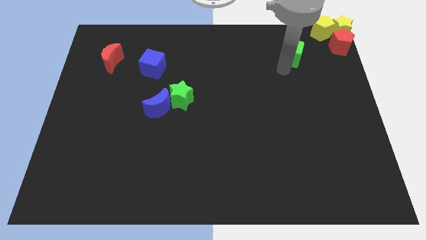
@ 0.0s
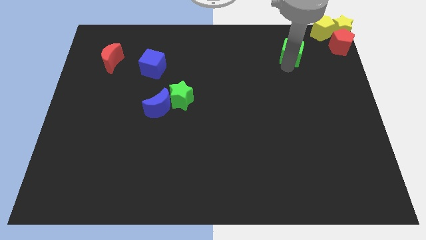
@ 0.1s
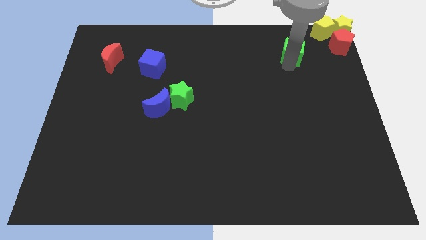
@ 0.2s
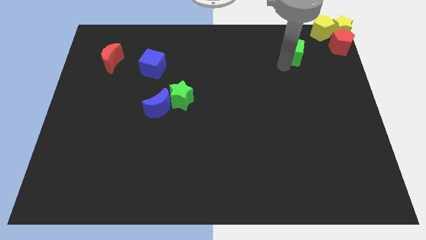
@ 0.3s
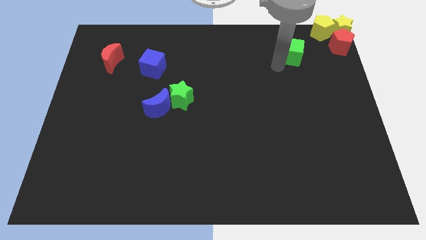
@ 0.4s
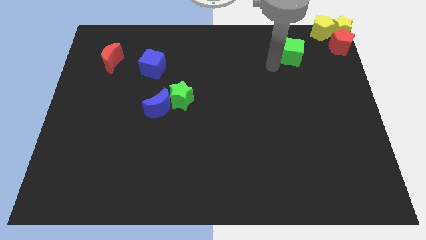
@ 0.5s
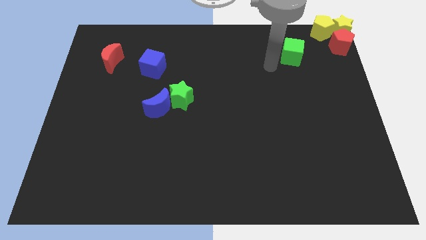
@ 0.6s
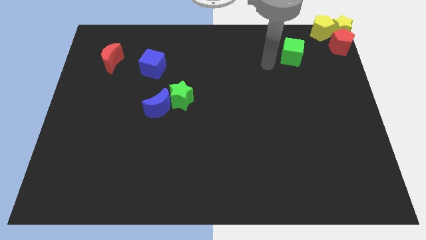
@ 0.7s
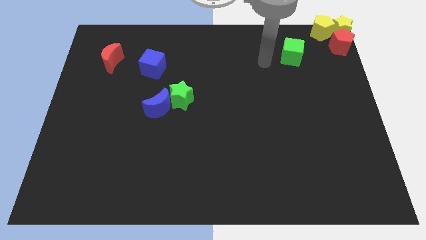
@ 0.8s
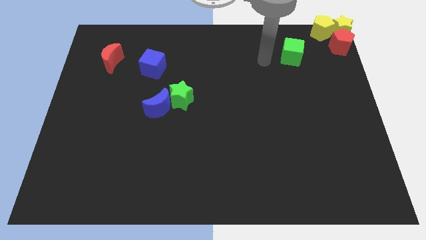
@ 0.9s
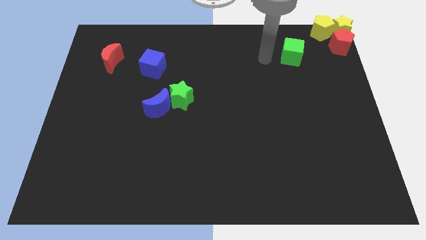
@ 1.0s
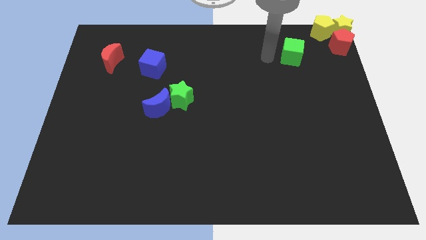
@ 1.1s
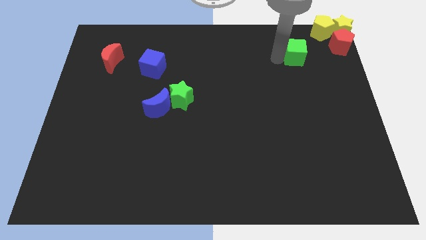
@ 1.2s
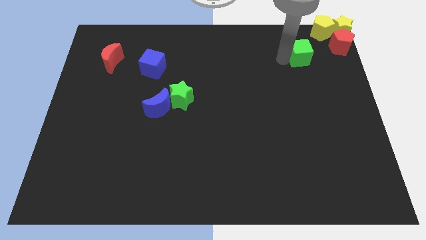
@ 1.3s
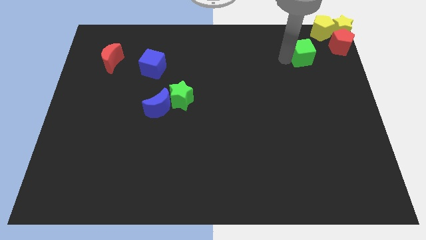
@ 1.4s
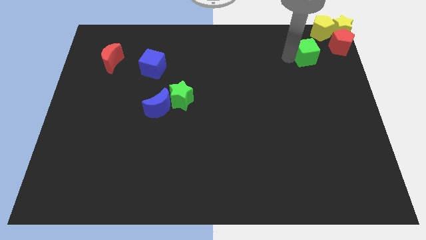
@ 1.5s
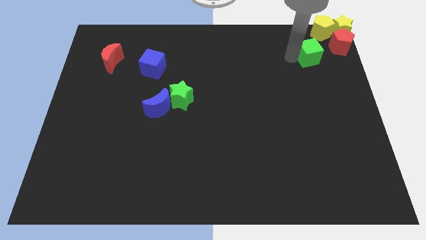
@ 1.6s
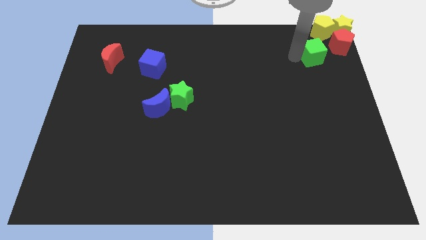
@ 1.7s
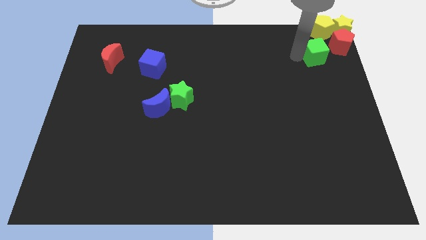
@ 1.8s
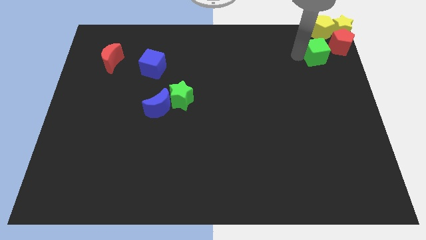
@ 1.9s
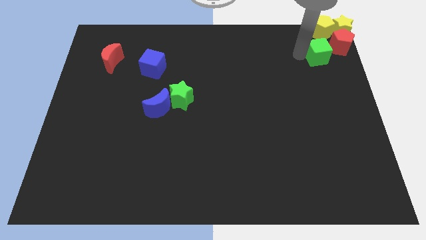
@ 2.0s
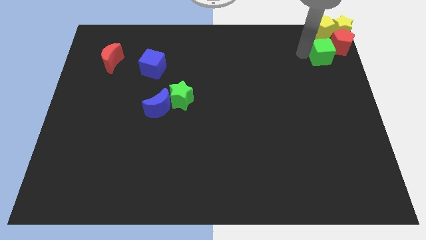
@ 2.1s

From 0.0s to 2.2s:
push the green cube to the bottom of the yellow pentagon

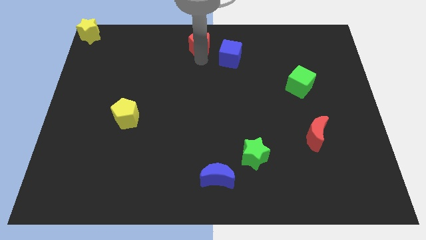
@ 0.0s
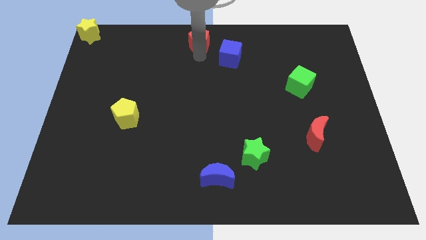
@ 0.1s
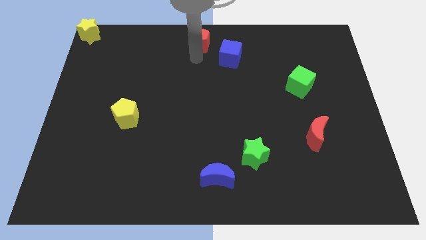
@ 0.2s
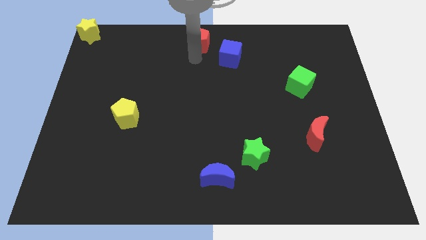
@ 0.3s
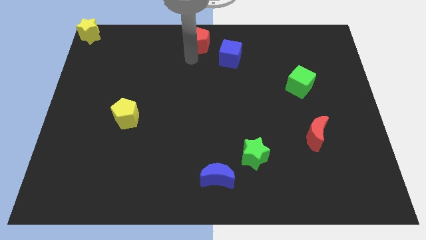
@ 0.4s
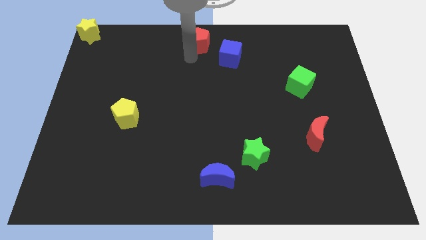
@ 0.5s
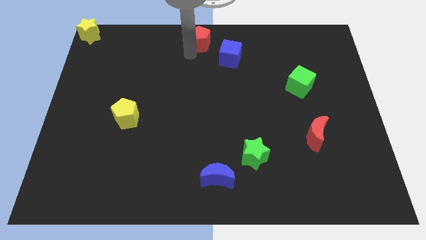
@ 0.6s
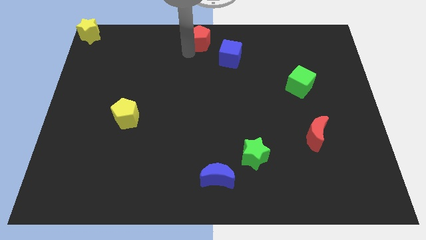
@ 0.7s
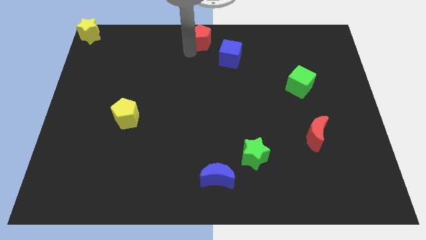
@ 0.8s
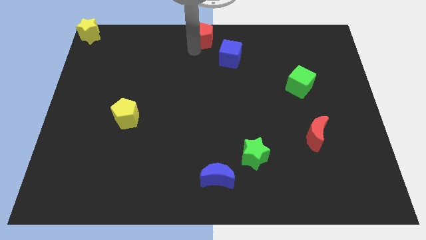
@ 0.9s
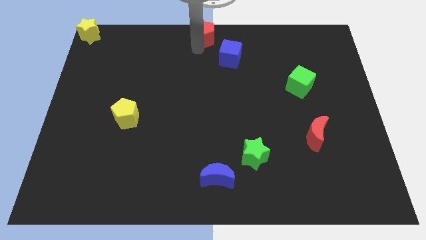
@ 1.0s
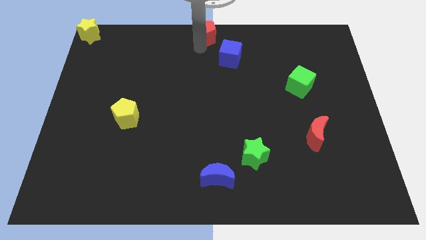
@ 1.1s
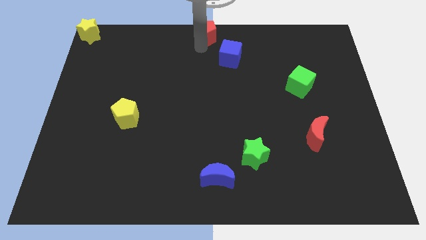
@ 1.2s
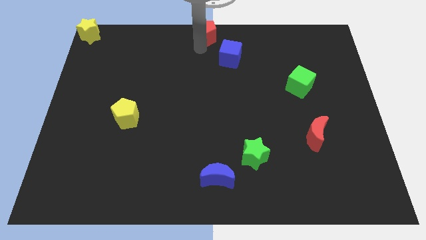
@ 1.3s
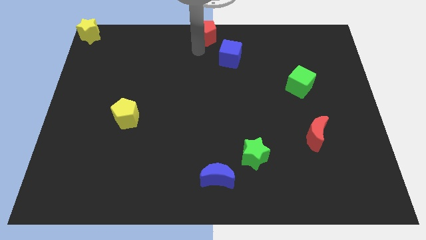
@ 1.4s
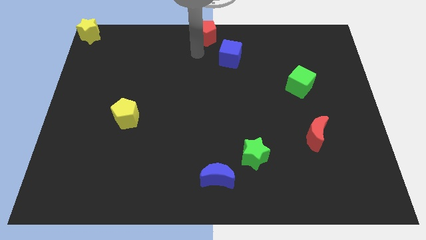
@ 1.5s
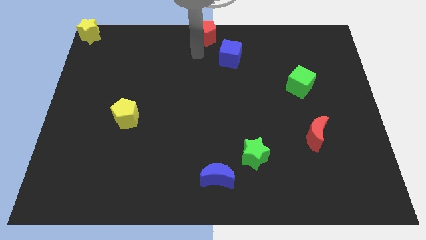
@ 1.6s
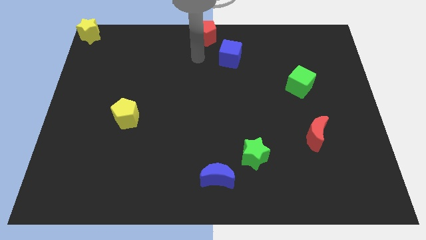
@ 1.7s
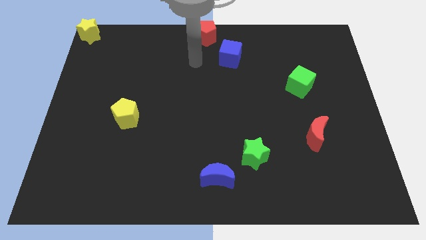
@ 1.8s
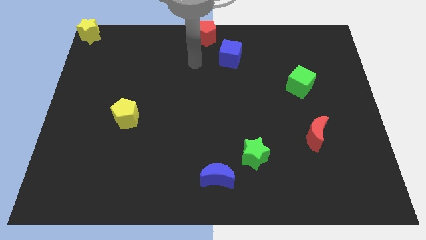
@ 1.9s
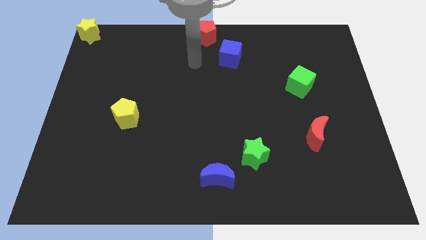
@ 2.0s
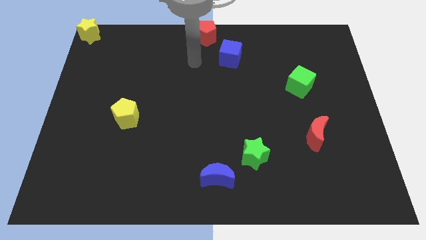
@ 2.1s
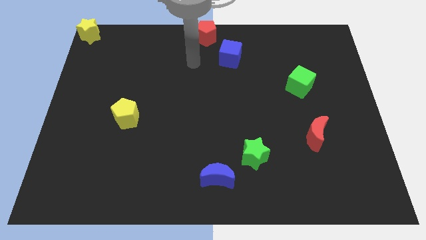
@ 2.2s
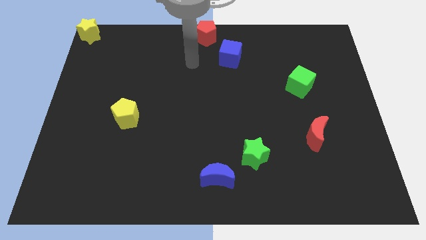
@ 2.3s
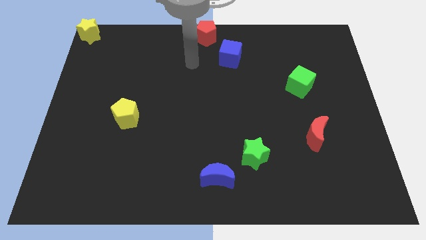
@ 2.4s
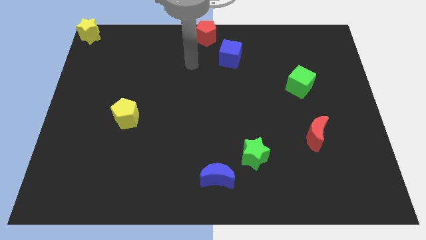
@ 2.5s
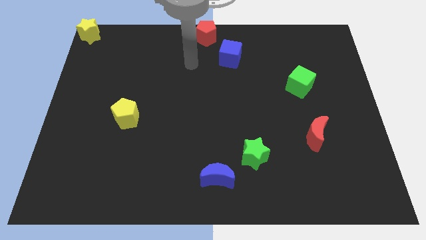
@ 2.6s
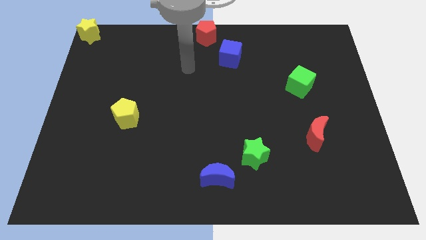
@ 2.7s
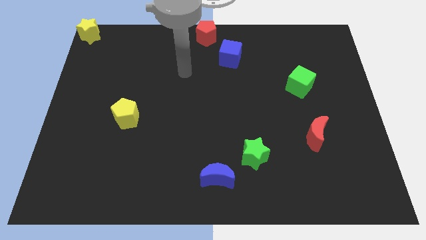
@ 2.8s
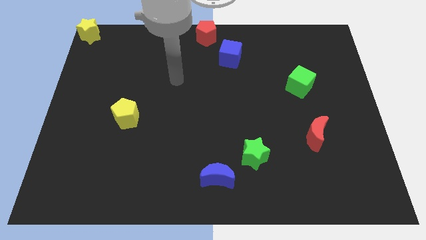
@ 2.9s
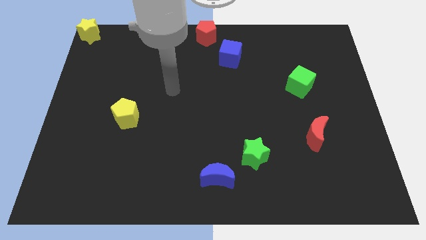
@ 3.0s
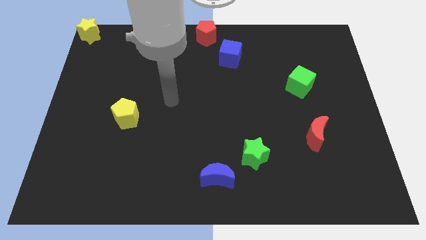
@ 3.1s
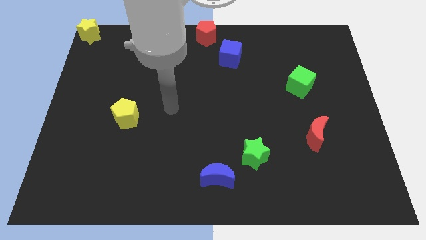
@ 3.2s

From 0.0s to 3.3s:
drag the red pentagon to the top center

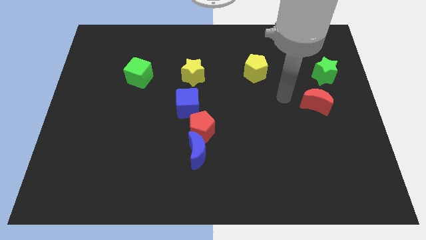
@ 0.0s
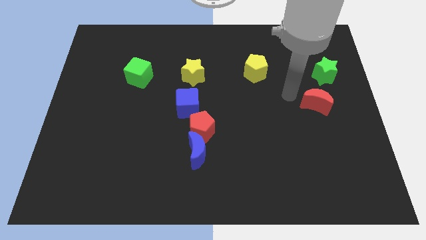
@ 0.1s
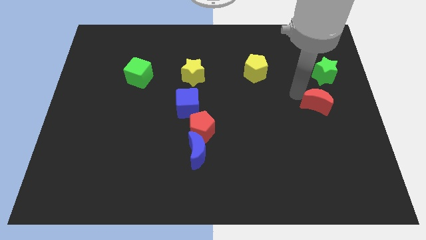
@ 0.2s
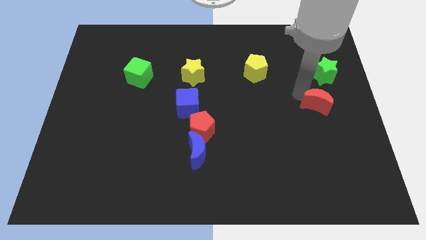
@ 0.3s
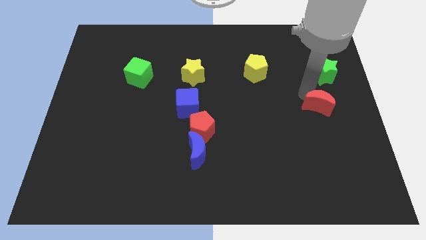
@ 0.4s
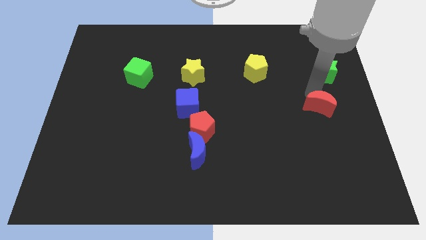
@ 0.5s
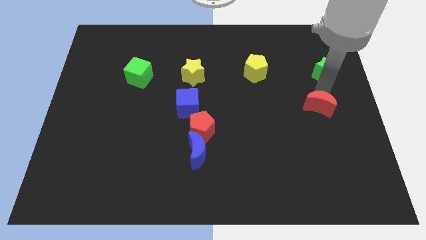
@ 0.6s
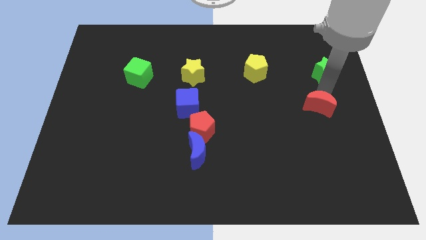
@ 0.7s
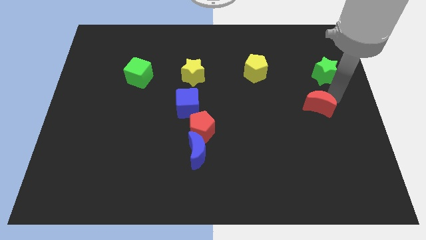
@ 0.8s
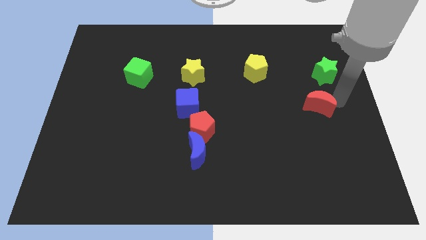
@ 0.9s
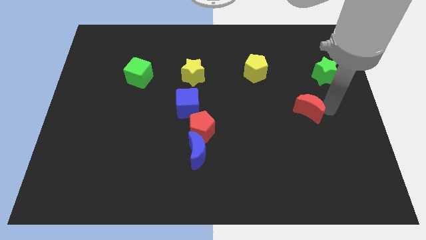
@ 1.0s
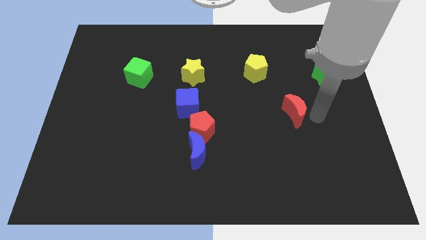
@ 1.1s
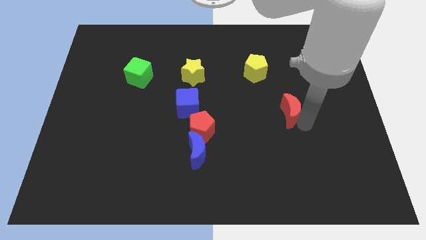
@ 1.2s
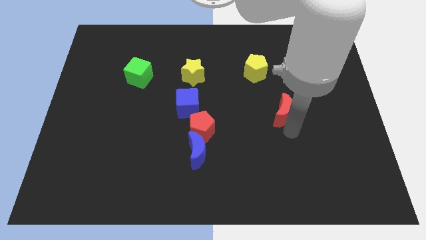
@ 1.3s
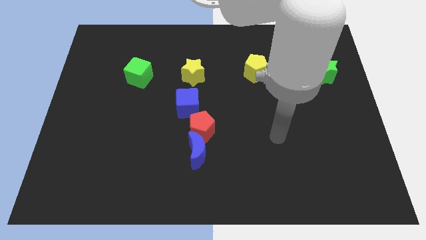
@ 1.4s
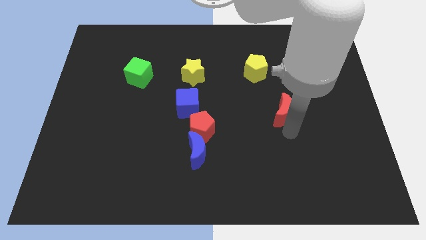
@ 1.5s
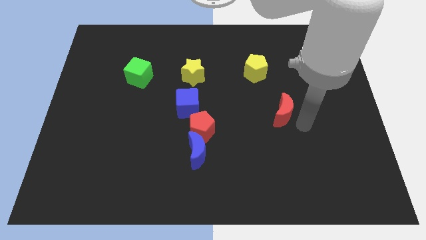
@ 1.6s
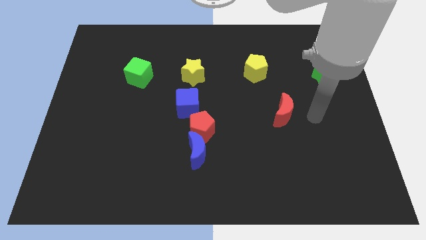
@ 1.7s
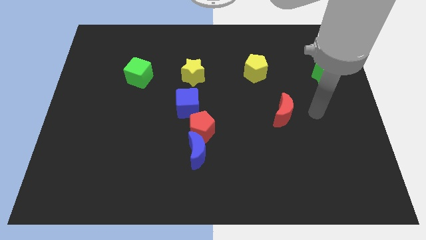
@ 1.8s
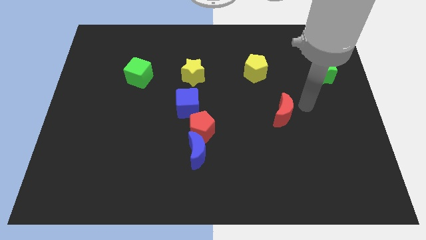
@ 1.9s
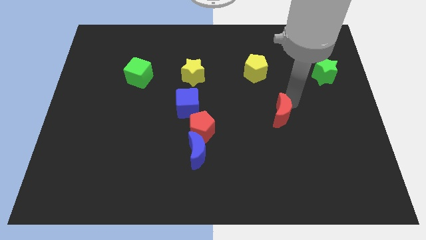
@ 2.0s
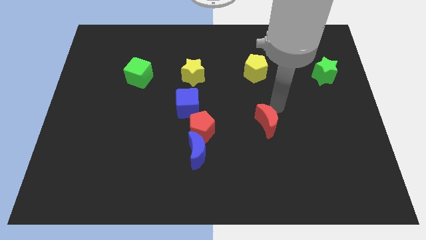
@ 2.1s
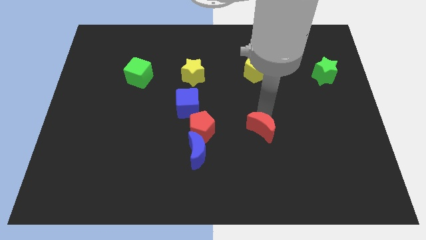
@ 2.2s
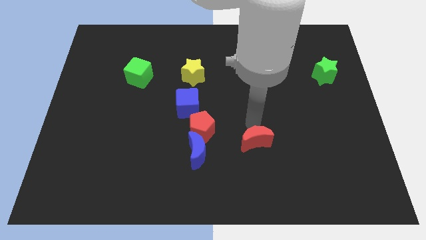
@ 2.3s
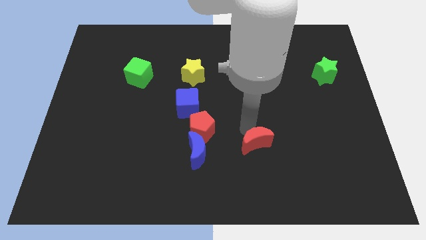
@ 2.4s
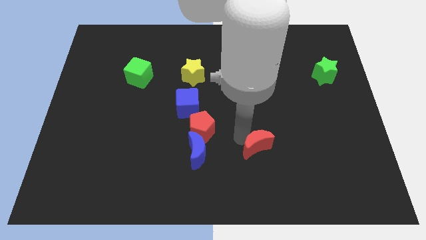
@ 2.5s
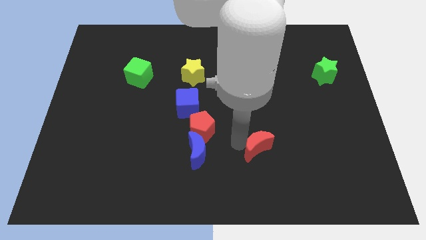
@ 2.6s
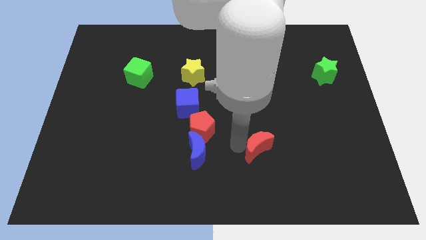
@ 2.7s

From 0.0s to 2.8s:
push the red moon to the vertical bottom side of the yellow pentagon

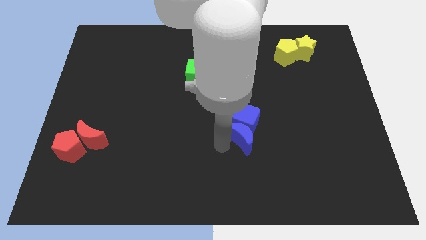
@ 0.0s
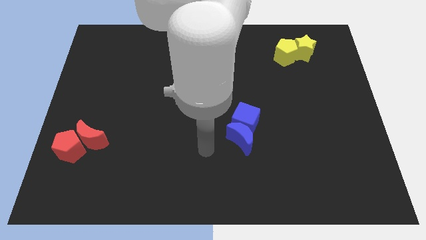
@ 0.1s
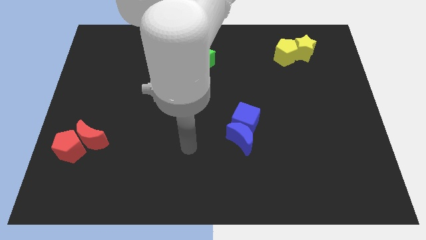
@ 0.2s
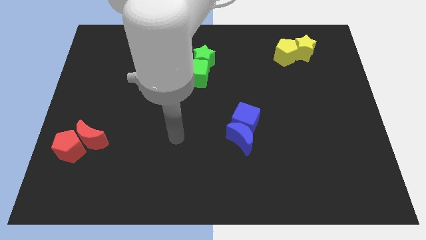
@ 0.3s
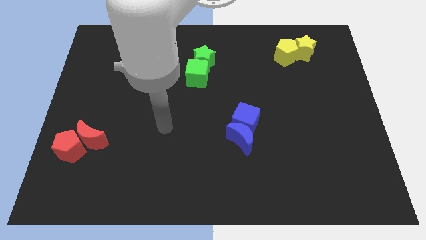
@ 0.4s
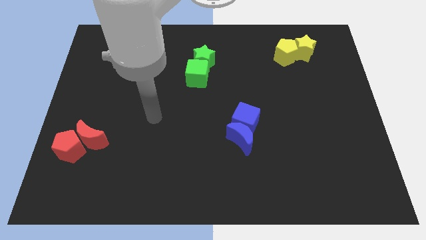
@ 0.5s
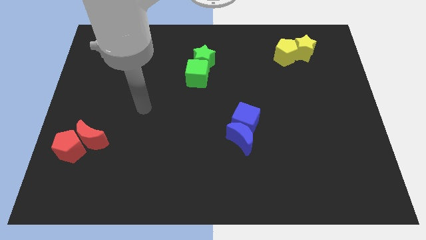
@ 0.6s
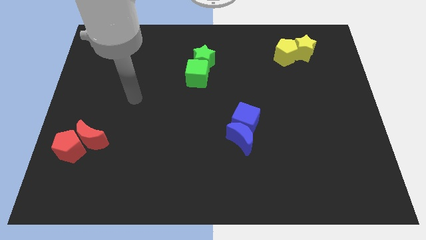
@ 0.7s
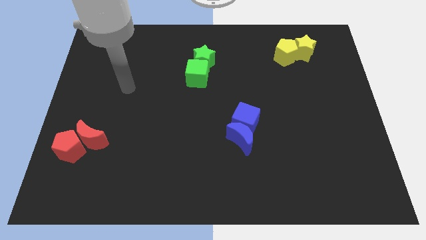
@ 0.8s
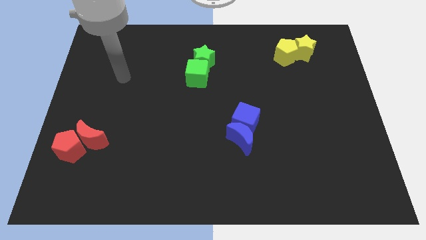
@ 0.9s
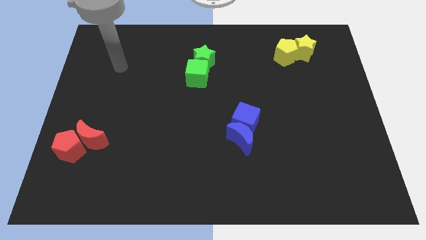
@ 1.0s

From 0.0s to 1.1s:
move away from blue blocks
